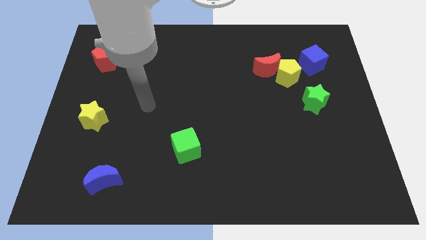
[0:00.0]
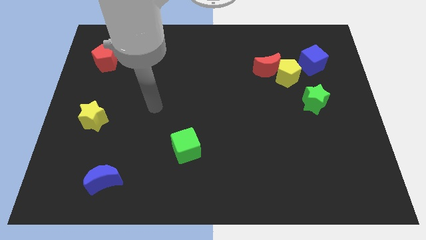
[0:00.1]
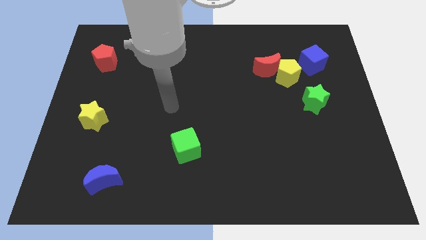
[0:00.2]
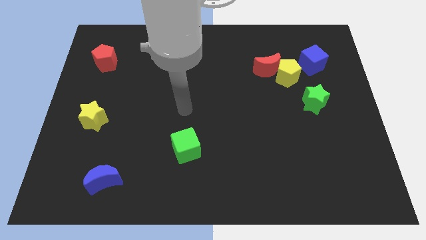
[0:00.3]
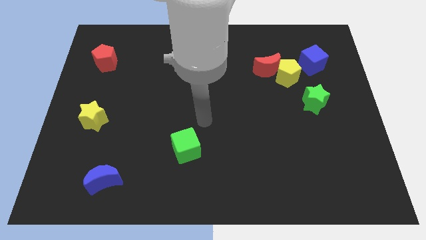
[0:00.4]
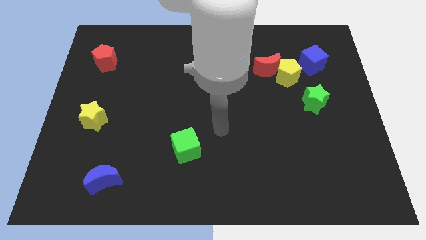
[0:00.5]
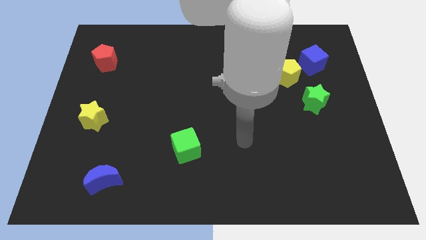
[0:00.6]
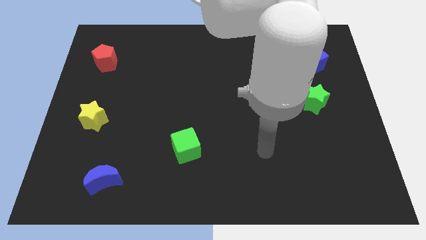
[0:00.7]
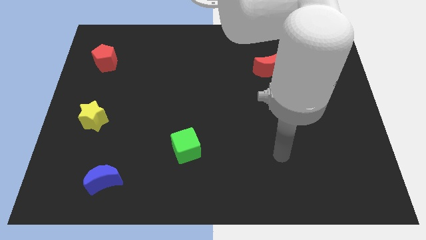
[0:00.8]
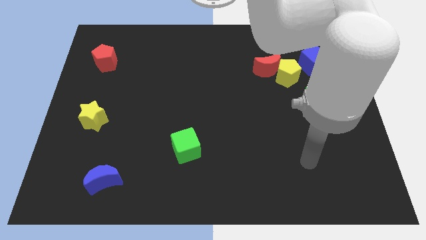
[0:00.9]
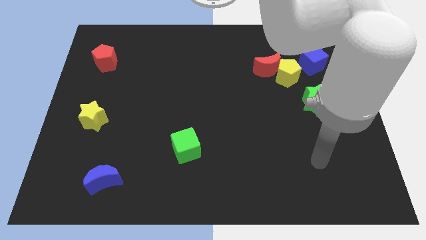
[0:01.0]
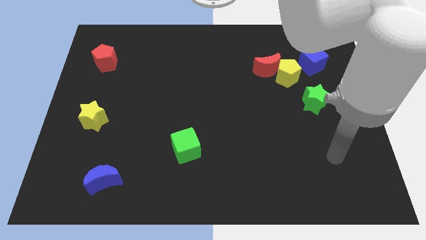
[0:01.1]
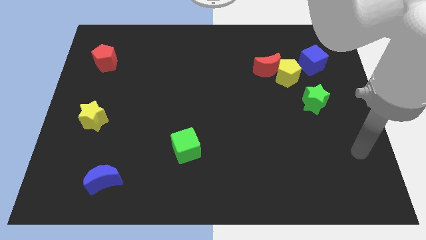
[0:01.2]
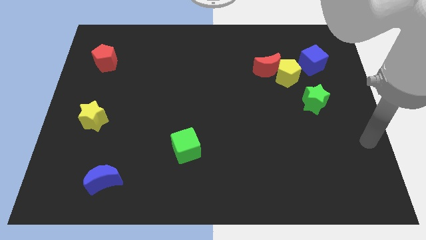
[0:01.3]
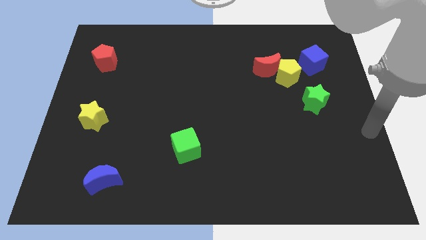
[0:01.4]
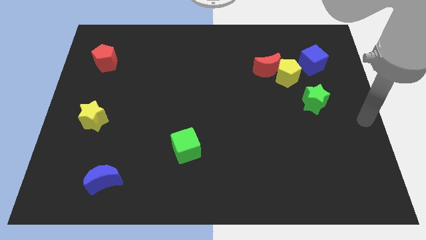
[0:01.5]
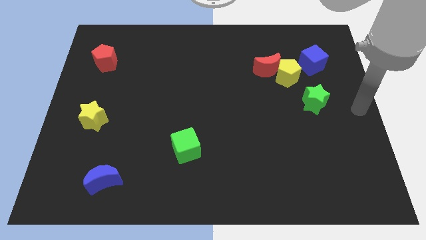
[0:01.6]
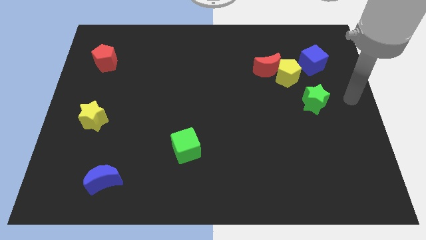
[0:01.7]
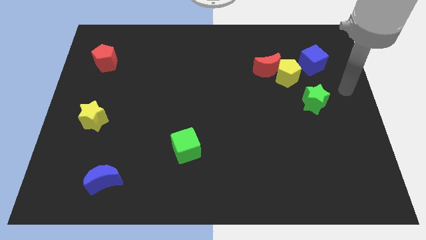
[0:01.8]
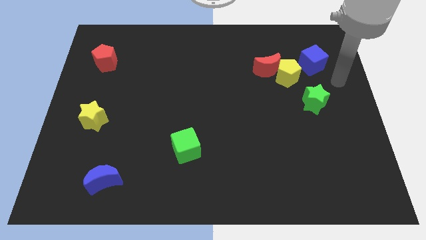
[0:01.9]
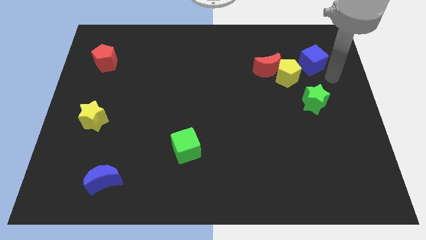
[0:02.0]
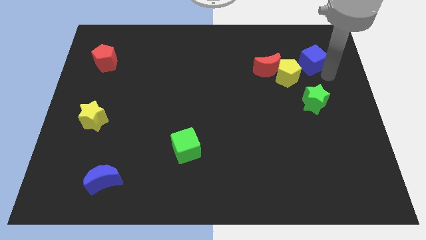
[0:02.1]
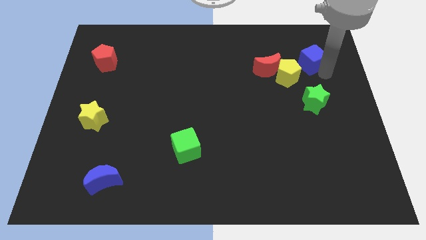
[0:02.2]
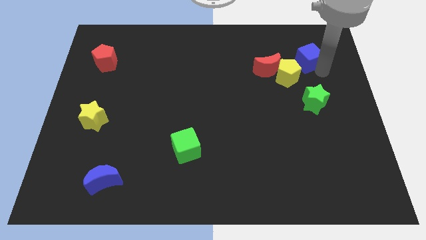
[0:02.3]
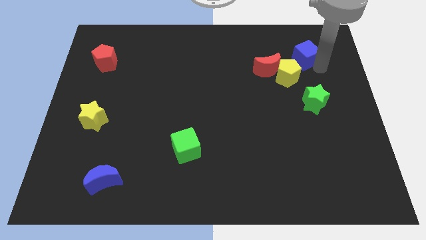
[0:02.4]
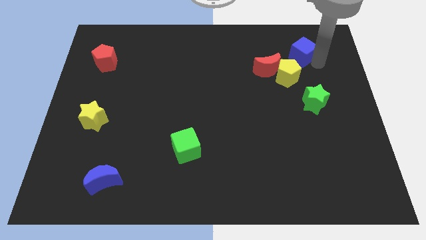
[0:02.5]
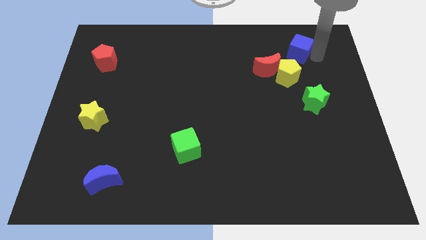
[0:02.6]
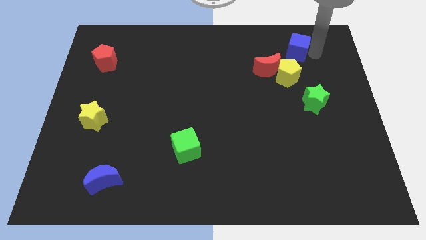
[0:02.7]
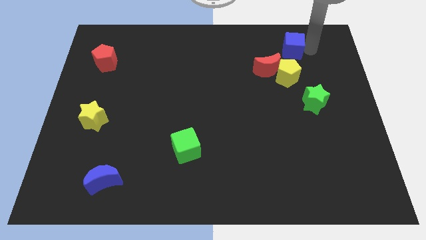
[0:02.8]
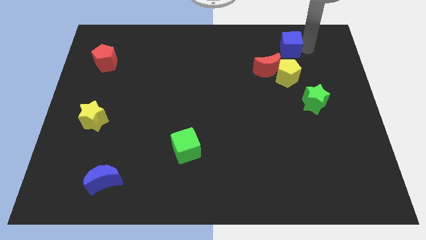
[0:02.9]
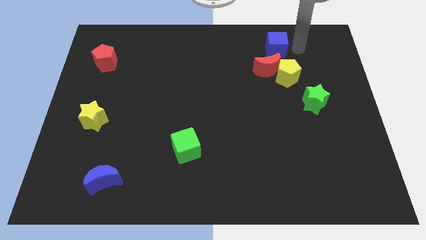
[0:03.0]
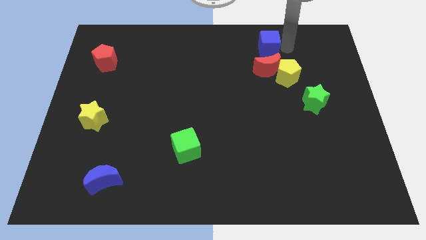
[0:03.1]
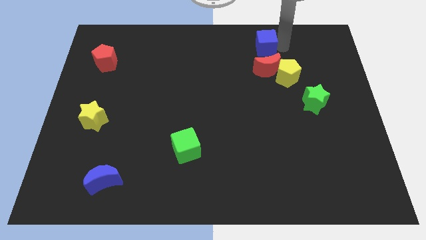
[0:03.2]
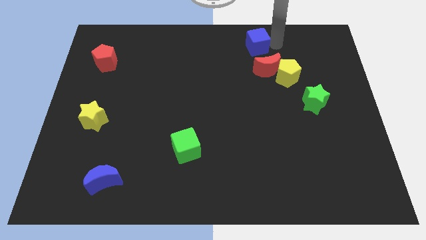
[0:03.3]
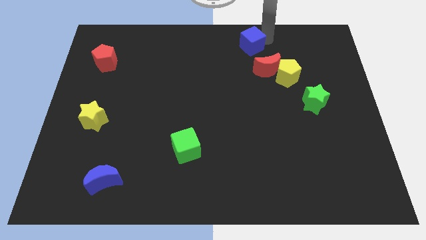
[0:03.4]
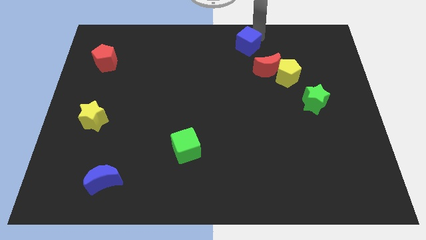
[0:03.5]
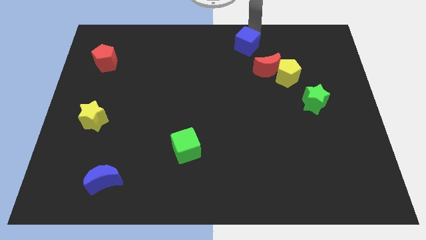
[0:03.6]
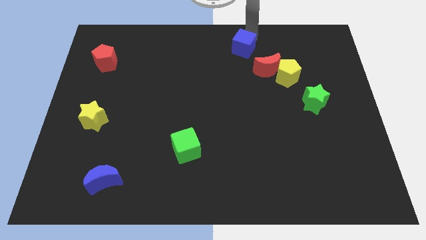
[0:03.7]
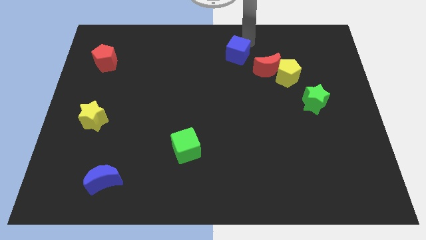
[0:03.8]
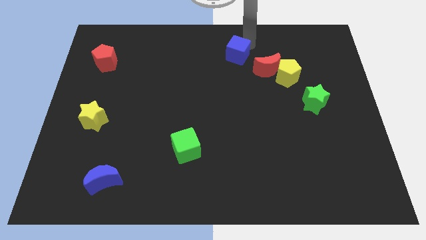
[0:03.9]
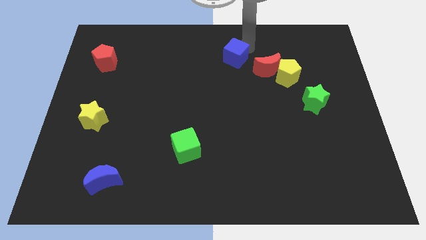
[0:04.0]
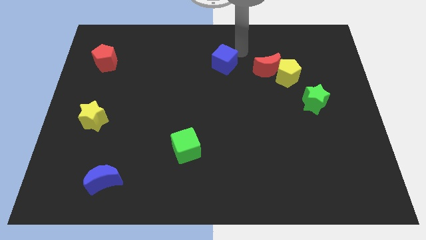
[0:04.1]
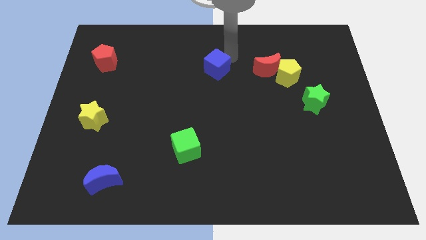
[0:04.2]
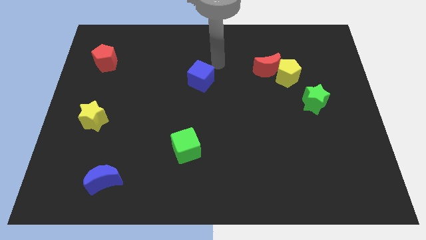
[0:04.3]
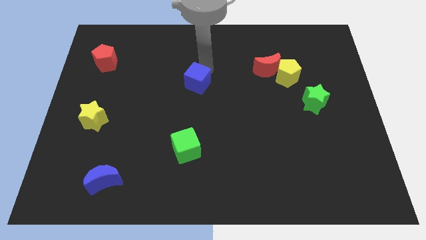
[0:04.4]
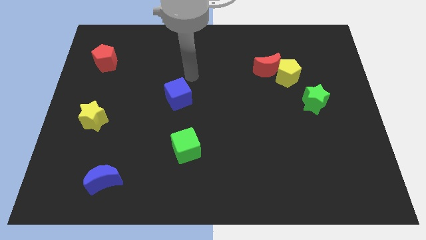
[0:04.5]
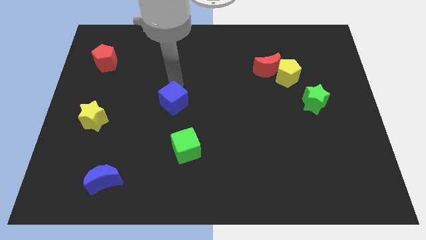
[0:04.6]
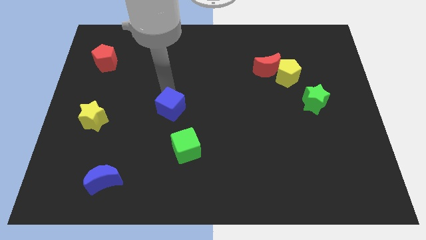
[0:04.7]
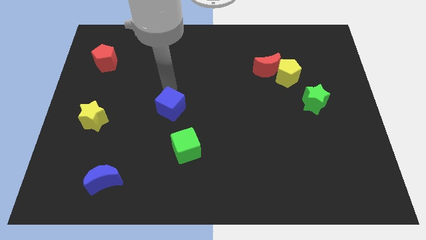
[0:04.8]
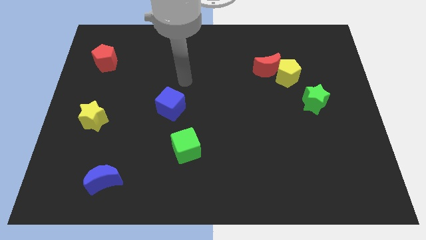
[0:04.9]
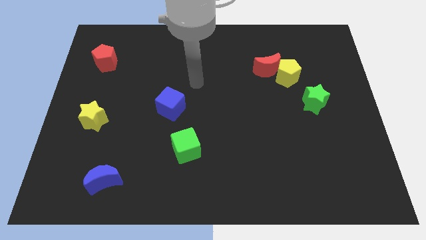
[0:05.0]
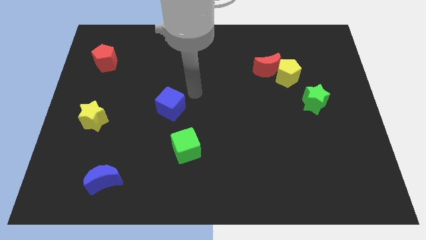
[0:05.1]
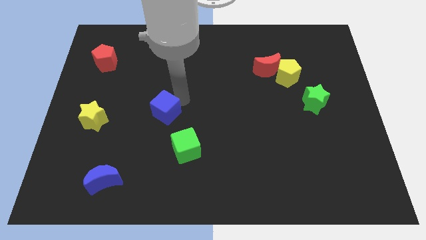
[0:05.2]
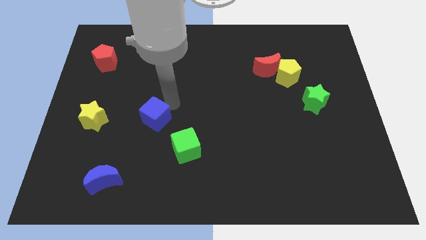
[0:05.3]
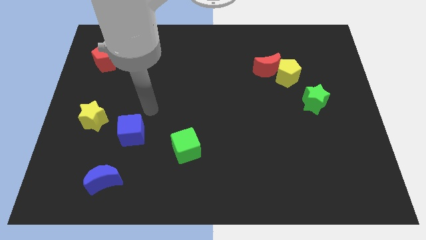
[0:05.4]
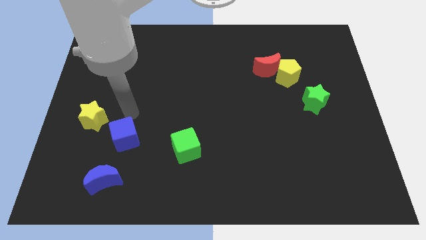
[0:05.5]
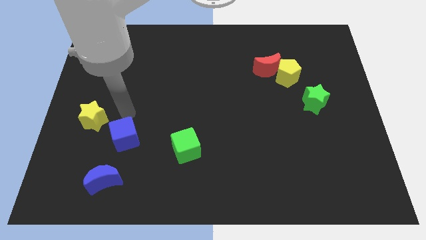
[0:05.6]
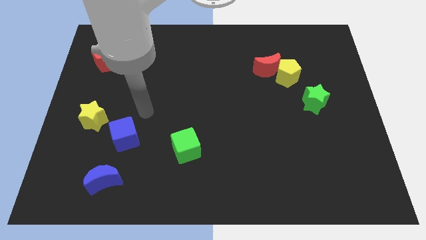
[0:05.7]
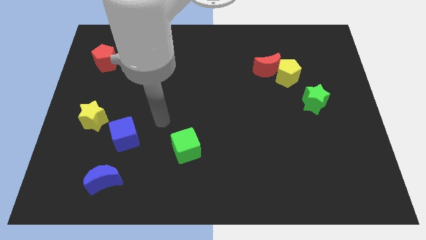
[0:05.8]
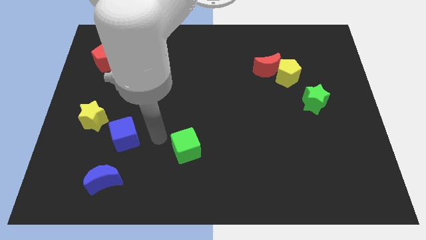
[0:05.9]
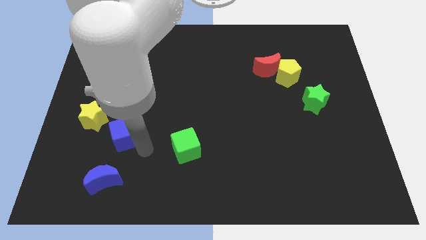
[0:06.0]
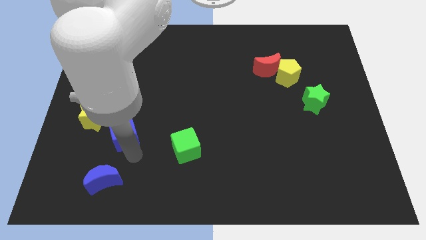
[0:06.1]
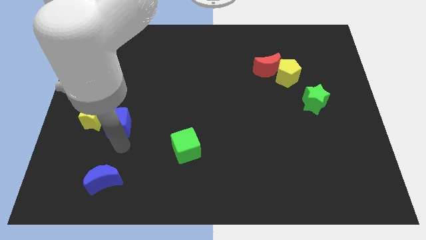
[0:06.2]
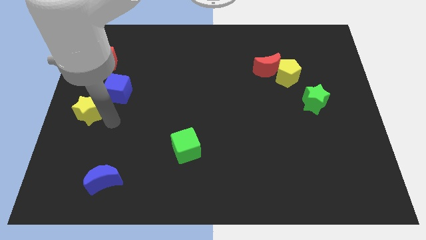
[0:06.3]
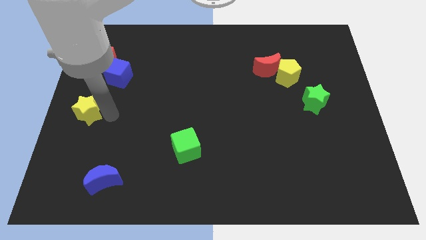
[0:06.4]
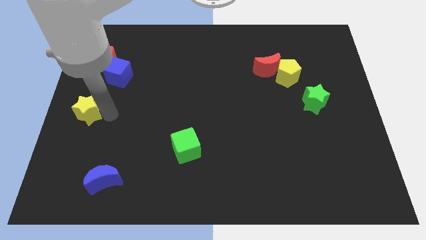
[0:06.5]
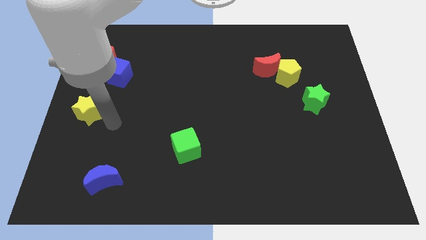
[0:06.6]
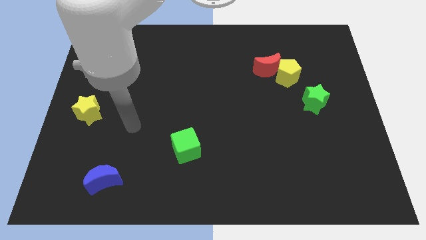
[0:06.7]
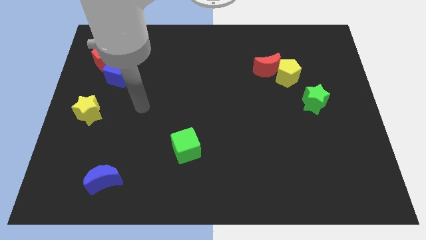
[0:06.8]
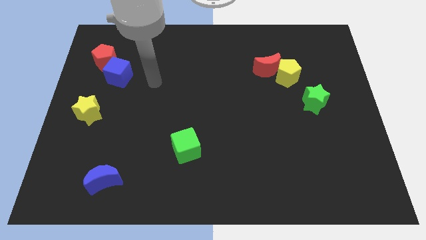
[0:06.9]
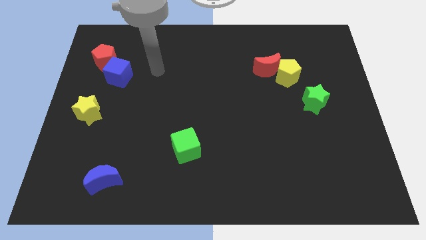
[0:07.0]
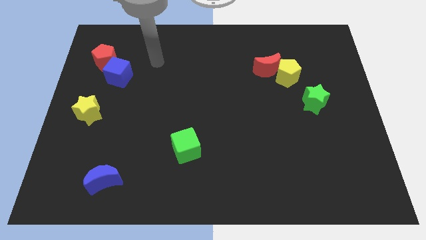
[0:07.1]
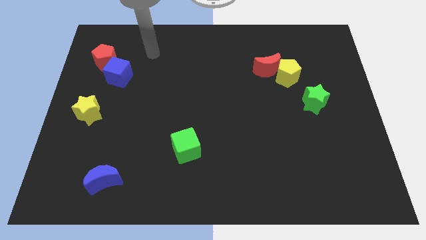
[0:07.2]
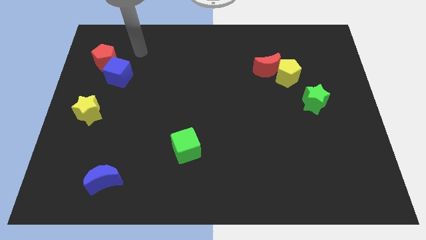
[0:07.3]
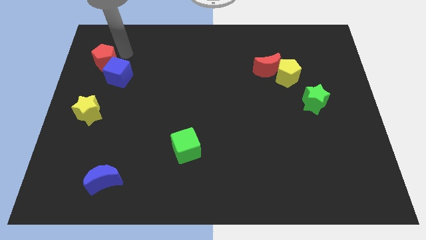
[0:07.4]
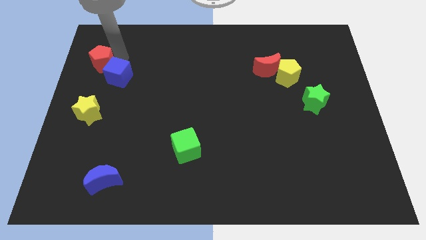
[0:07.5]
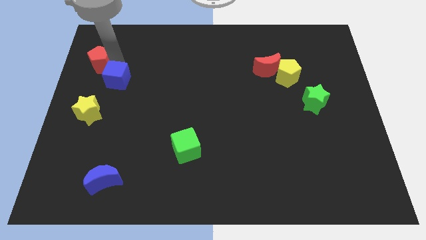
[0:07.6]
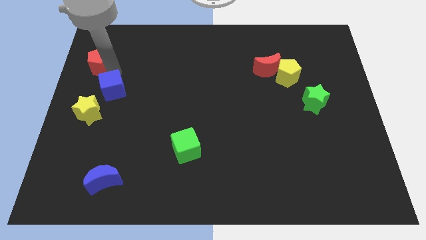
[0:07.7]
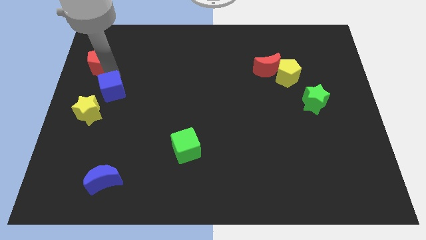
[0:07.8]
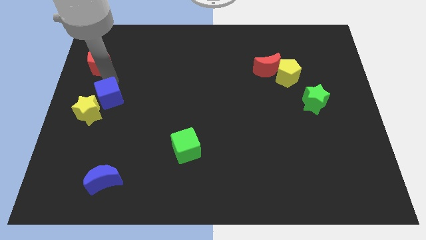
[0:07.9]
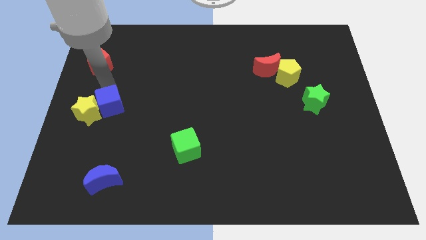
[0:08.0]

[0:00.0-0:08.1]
push the blue cube close to the yellow star

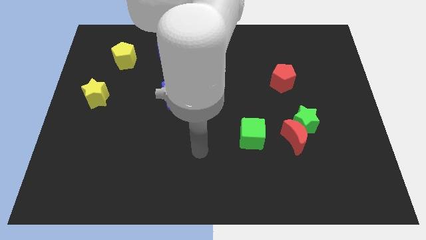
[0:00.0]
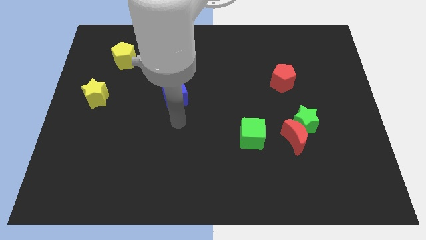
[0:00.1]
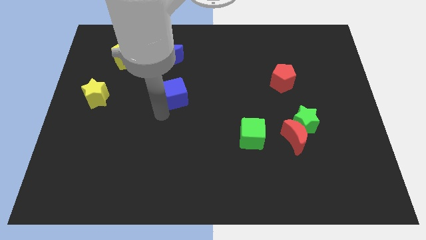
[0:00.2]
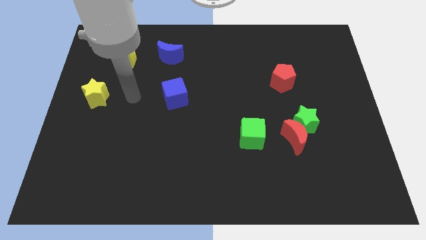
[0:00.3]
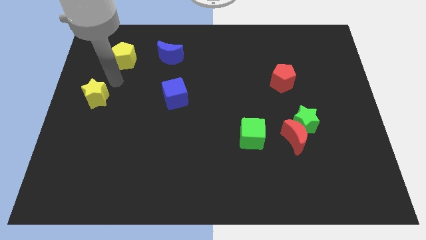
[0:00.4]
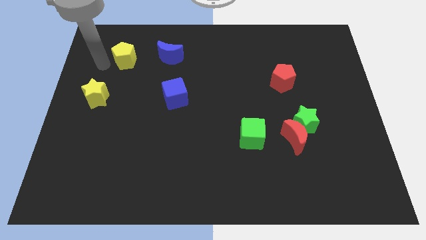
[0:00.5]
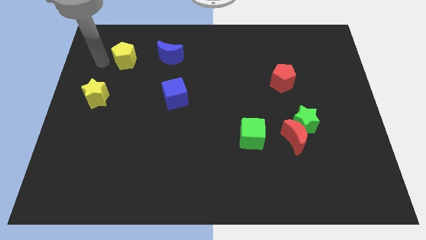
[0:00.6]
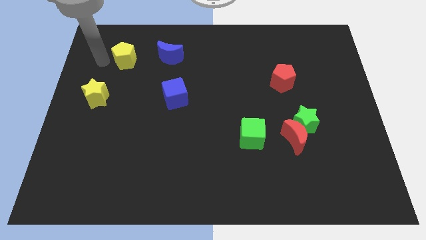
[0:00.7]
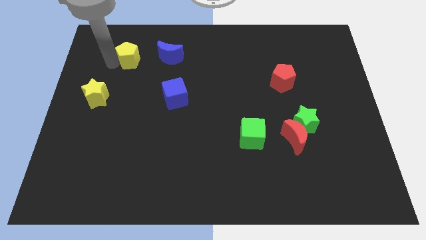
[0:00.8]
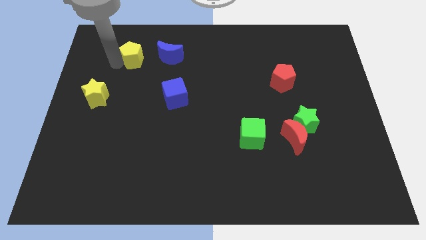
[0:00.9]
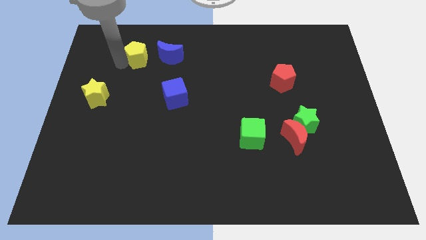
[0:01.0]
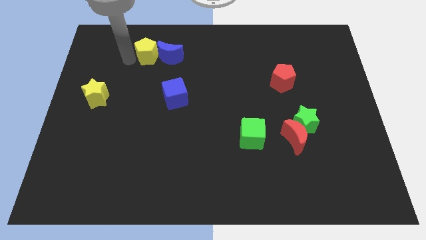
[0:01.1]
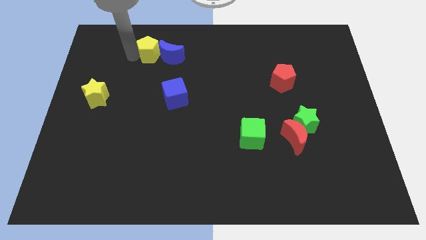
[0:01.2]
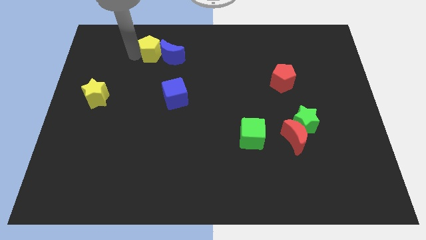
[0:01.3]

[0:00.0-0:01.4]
put the yellow pentagon to the blue moon
